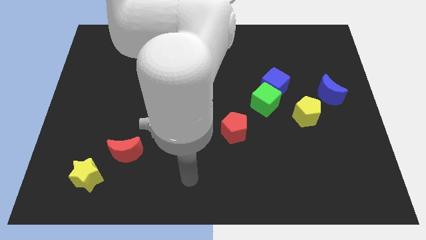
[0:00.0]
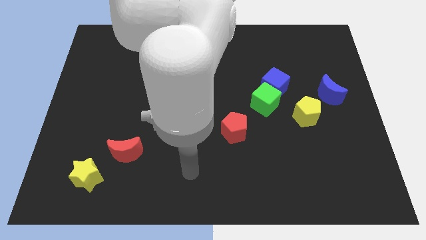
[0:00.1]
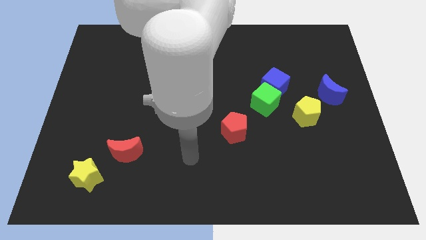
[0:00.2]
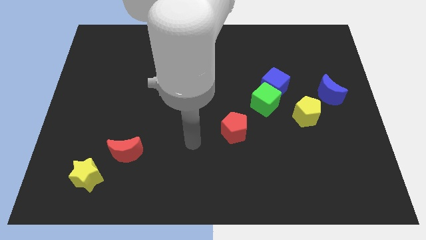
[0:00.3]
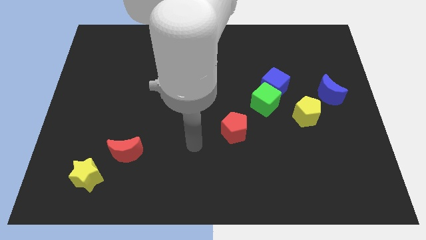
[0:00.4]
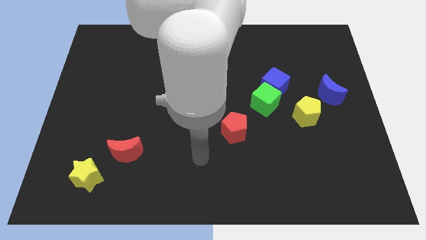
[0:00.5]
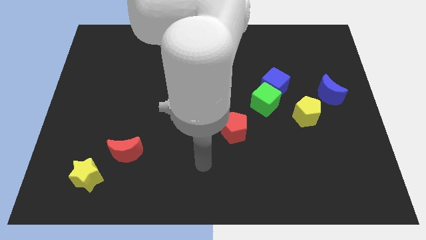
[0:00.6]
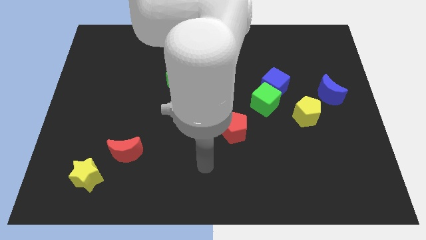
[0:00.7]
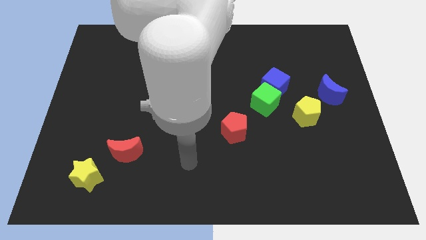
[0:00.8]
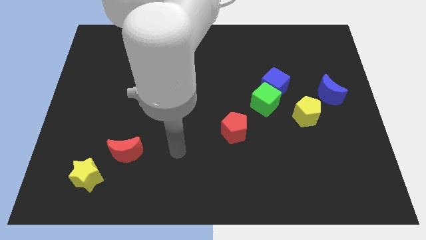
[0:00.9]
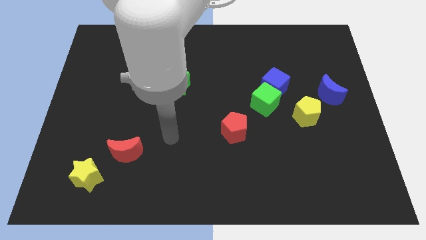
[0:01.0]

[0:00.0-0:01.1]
place arm in between red pentagon and red crescent

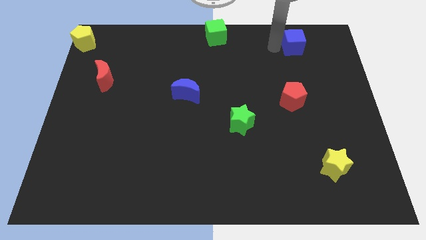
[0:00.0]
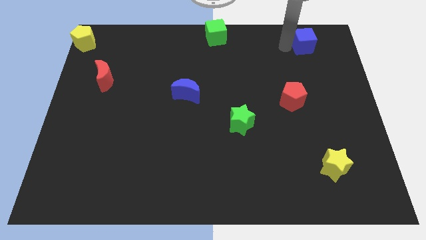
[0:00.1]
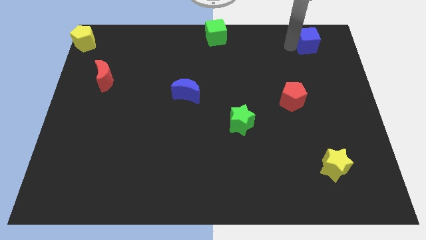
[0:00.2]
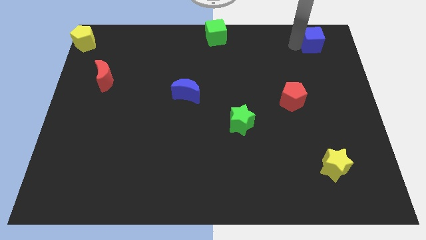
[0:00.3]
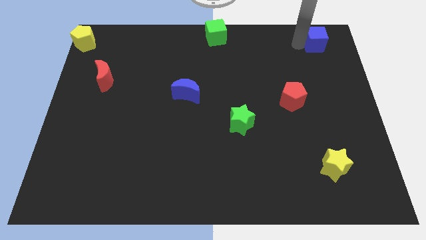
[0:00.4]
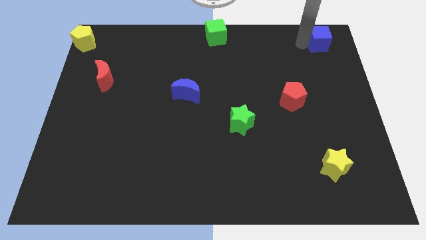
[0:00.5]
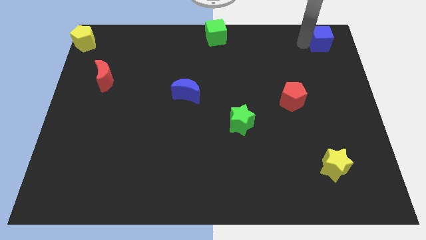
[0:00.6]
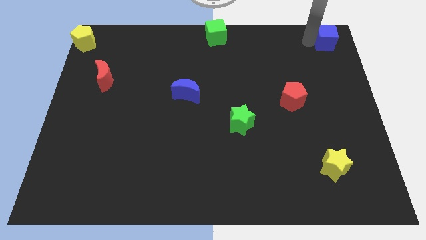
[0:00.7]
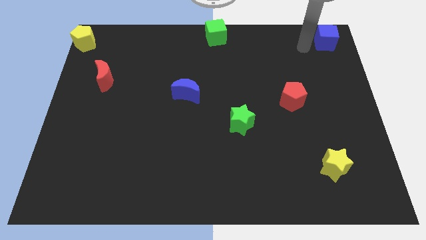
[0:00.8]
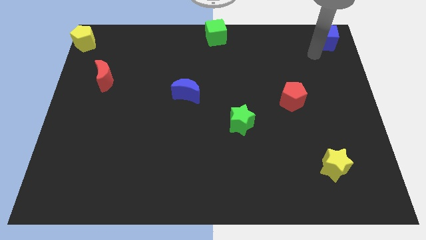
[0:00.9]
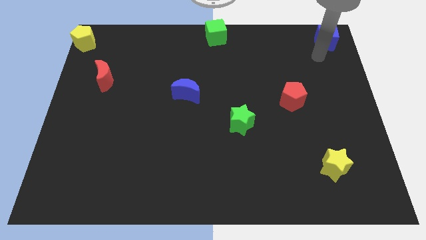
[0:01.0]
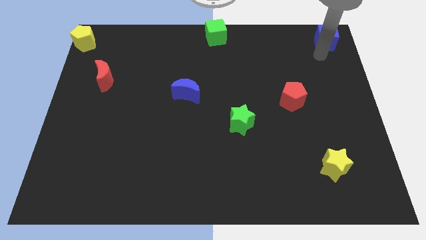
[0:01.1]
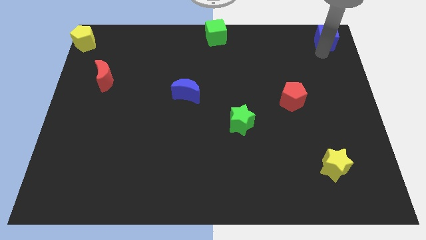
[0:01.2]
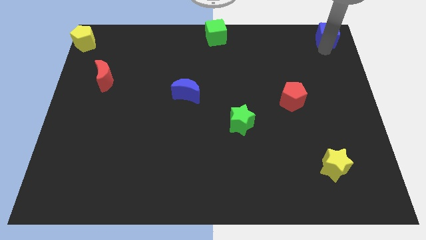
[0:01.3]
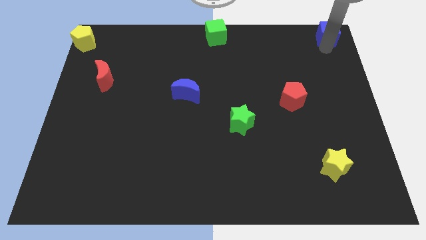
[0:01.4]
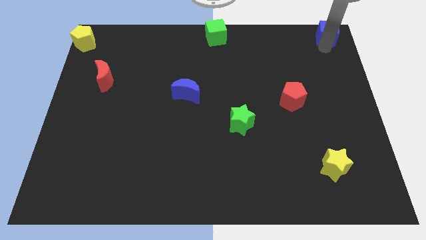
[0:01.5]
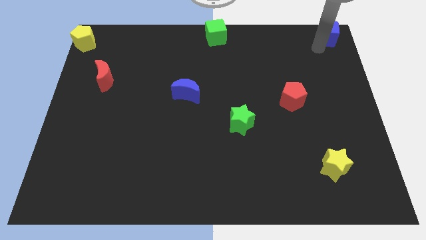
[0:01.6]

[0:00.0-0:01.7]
slide the blue cube diagonally top right to the red pentagon

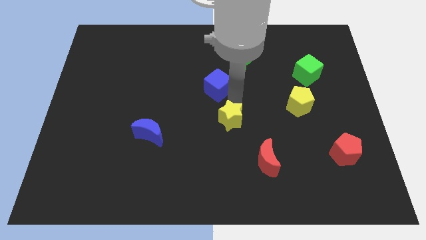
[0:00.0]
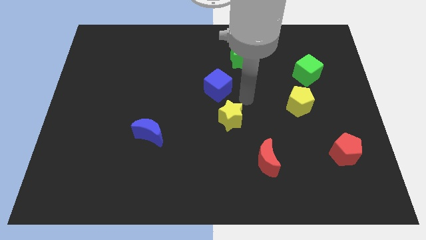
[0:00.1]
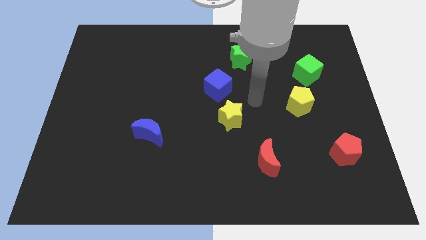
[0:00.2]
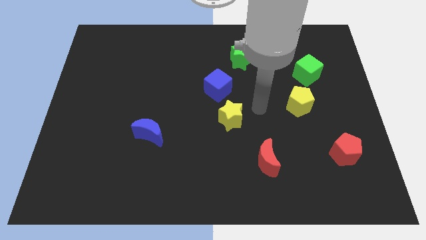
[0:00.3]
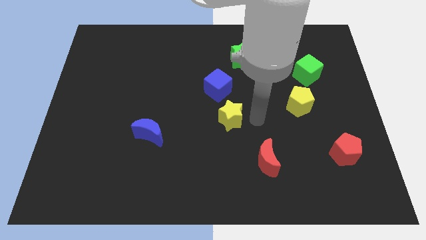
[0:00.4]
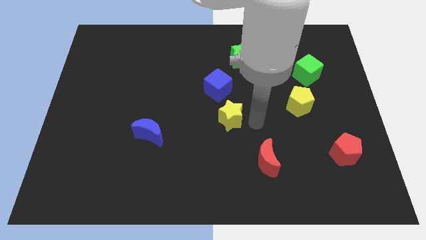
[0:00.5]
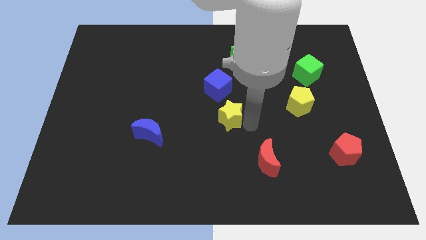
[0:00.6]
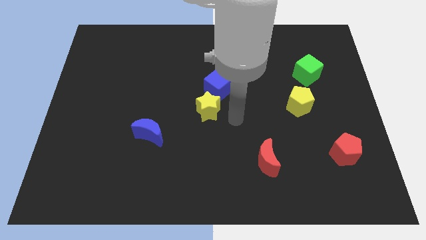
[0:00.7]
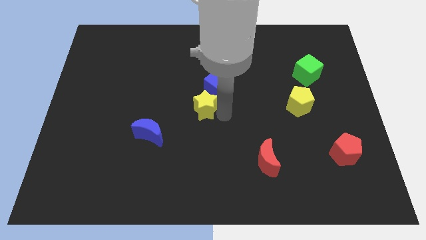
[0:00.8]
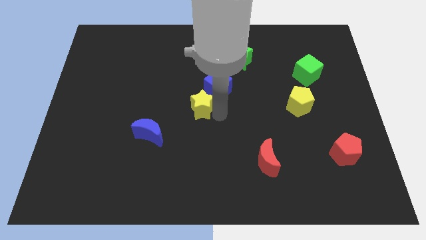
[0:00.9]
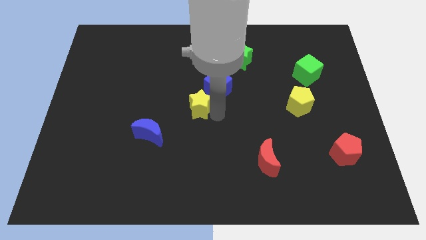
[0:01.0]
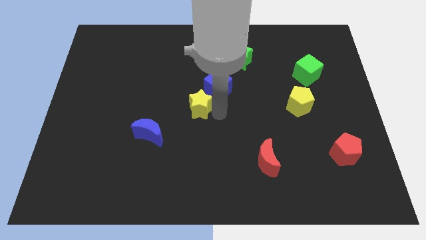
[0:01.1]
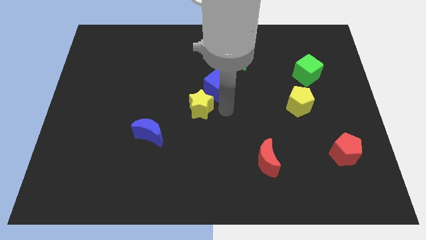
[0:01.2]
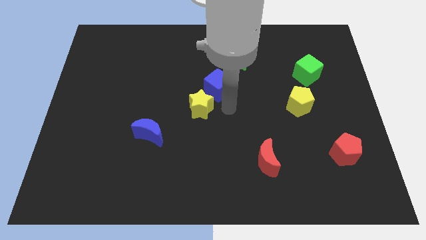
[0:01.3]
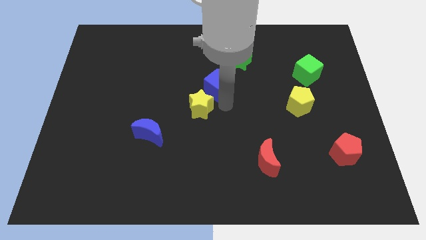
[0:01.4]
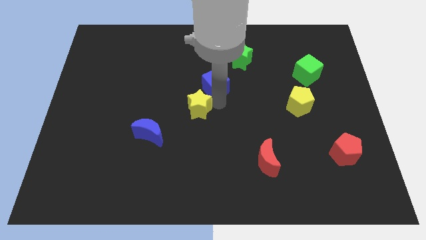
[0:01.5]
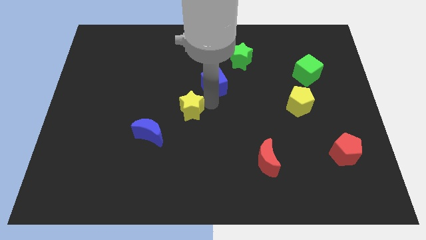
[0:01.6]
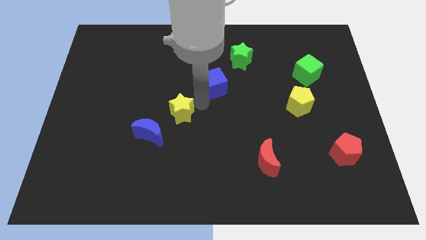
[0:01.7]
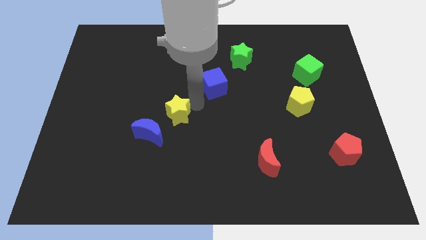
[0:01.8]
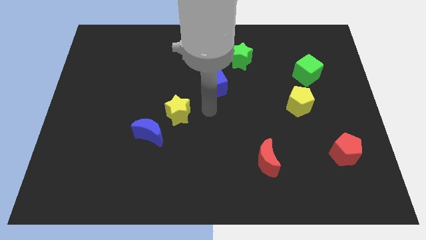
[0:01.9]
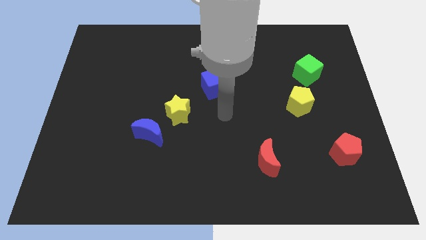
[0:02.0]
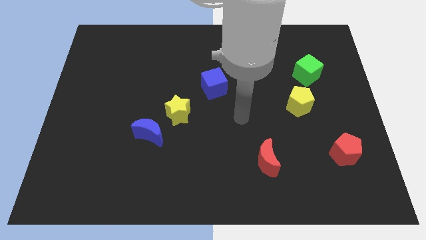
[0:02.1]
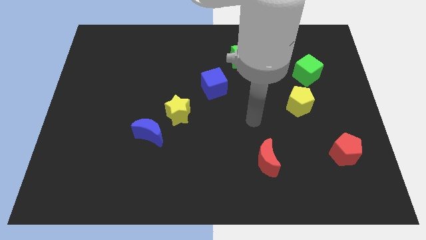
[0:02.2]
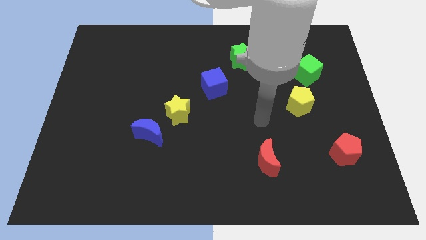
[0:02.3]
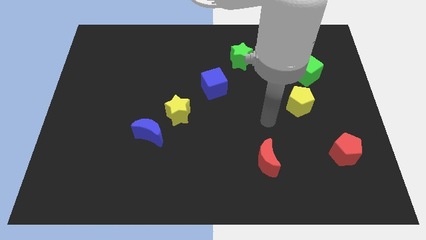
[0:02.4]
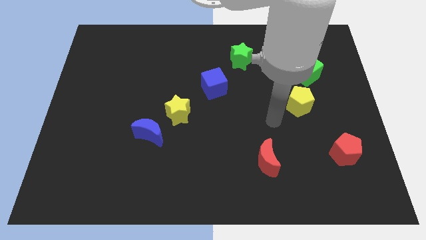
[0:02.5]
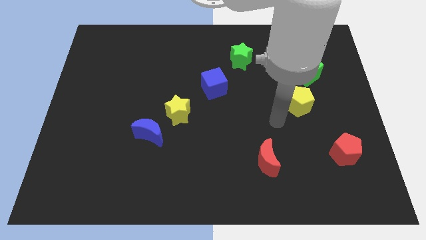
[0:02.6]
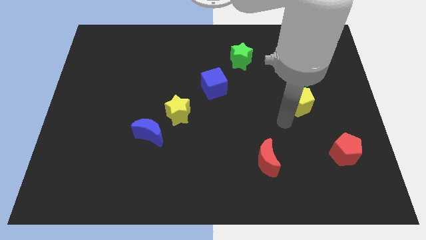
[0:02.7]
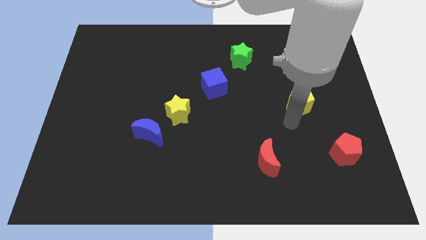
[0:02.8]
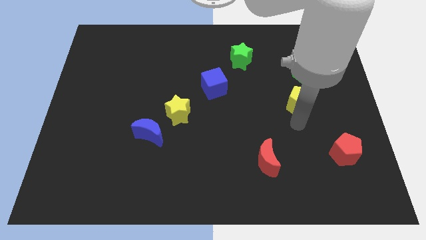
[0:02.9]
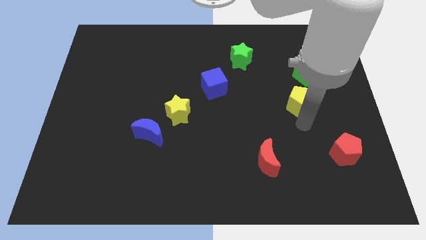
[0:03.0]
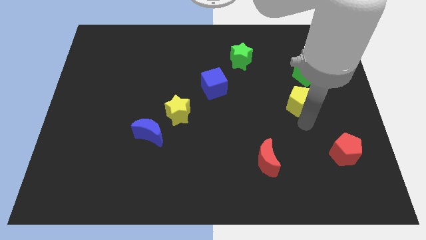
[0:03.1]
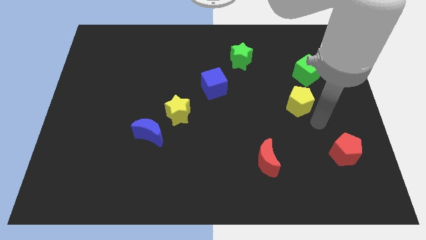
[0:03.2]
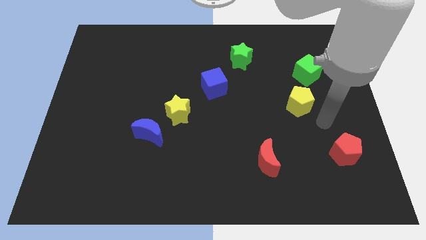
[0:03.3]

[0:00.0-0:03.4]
place the yellow star diagonally in between both the blue blocks

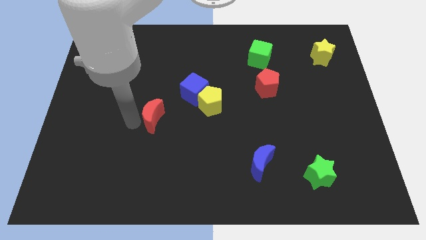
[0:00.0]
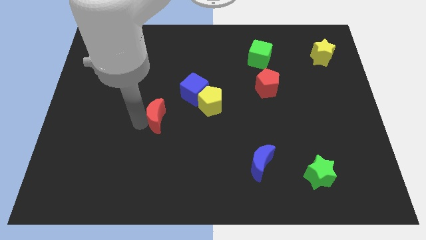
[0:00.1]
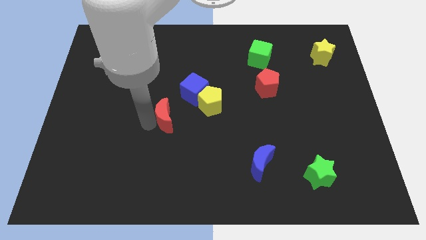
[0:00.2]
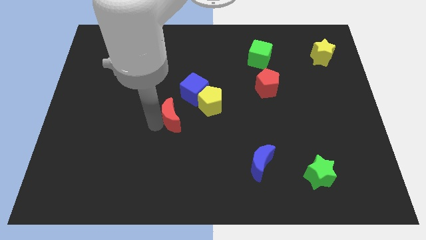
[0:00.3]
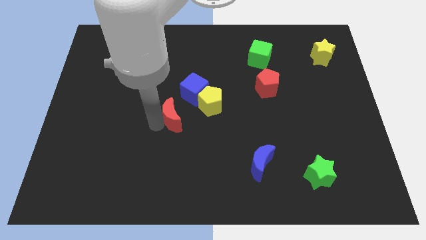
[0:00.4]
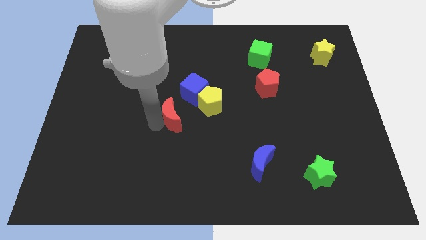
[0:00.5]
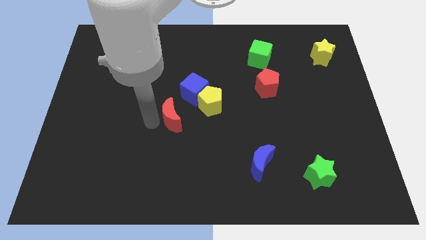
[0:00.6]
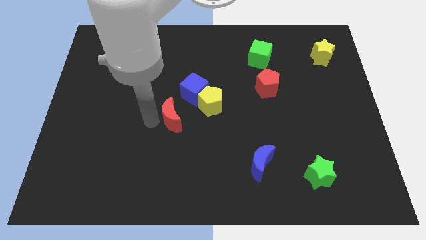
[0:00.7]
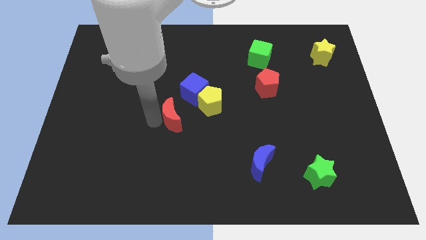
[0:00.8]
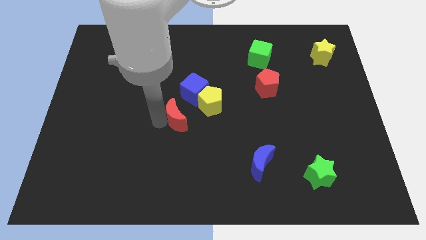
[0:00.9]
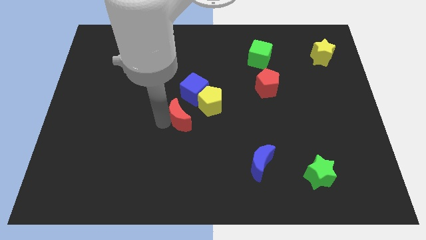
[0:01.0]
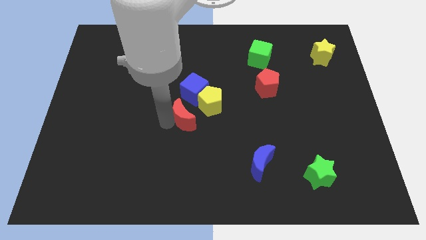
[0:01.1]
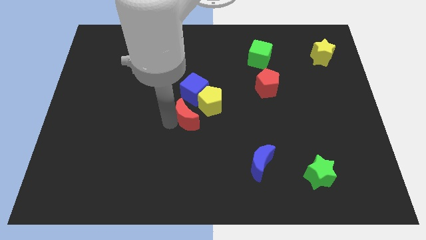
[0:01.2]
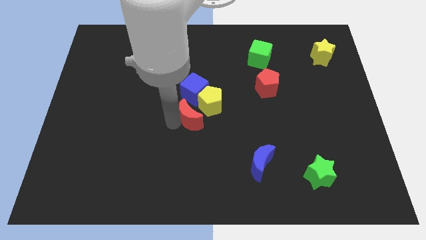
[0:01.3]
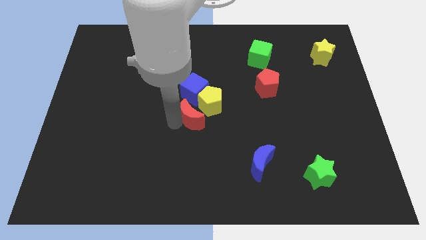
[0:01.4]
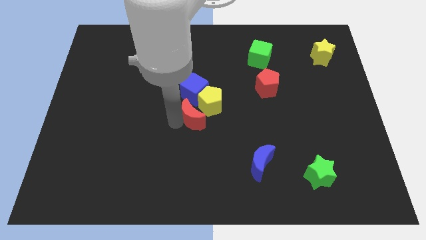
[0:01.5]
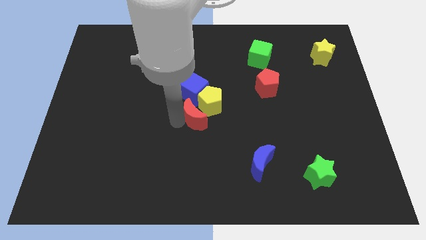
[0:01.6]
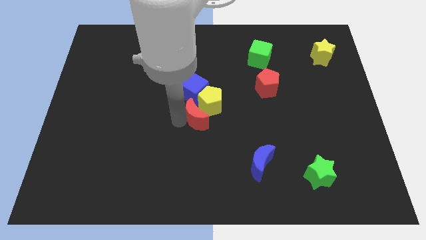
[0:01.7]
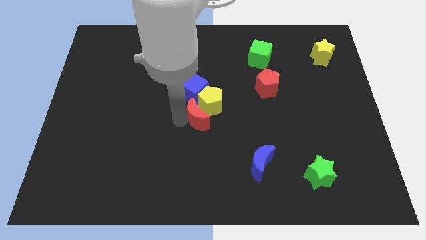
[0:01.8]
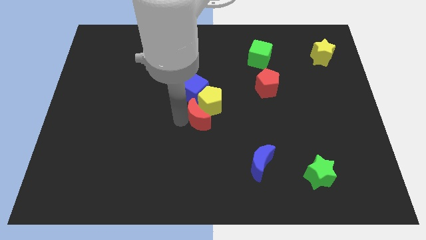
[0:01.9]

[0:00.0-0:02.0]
move the red crescent closer to the yellow pentagon

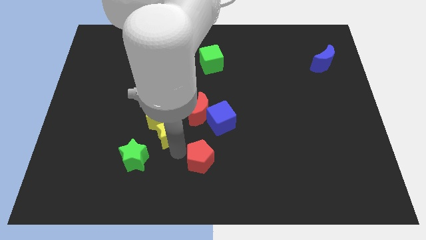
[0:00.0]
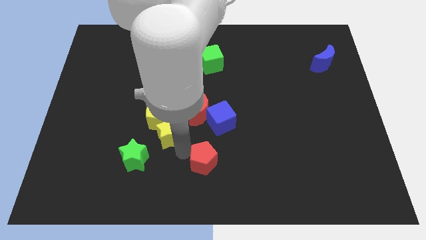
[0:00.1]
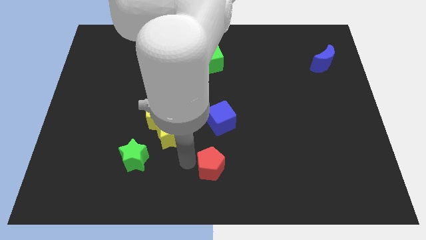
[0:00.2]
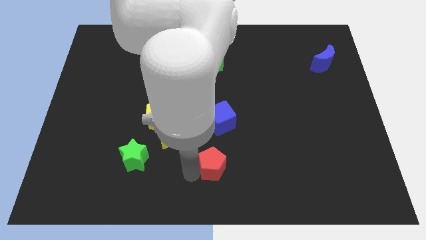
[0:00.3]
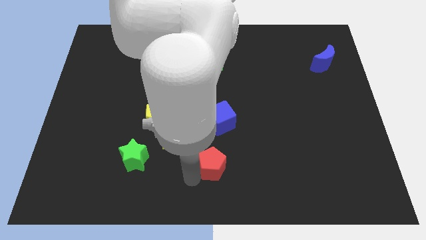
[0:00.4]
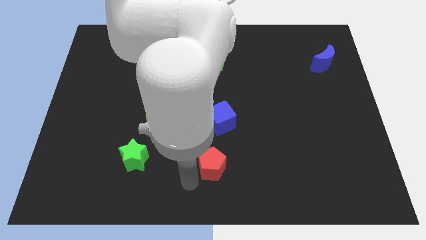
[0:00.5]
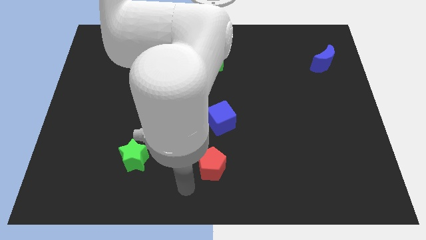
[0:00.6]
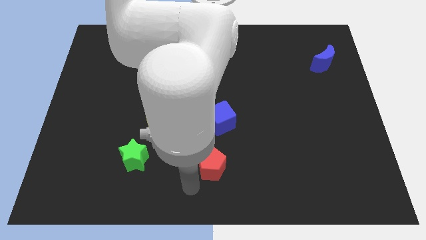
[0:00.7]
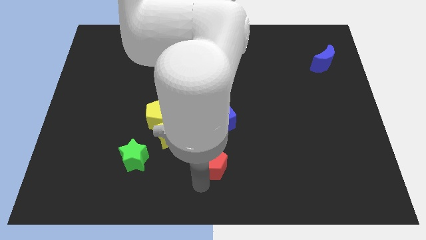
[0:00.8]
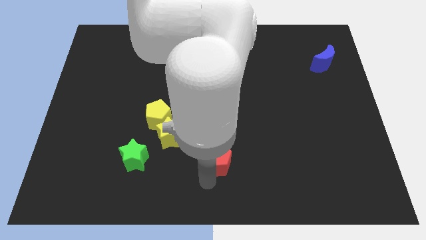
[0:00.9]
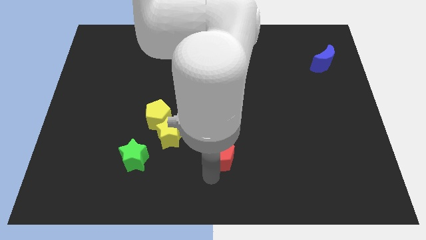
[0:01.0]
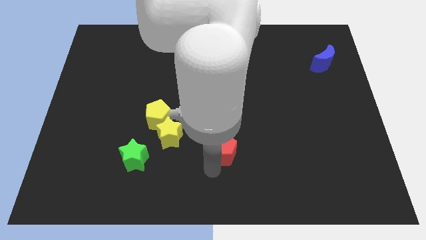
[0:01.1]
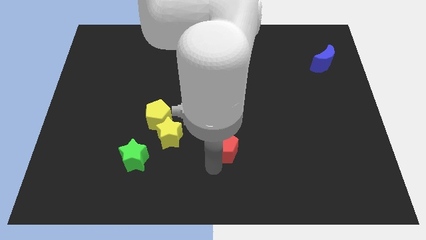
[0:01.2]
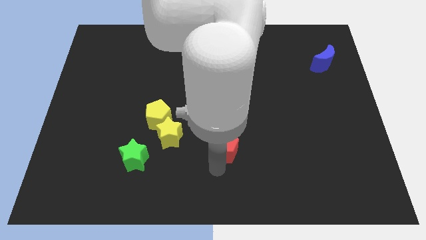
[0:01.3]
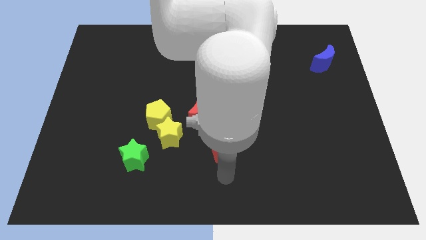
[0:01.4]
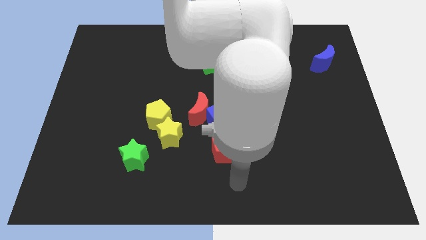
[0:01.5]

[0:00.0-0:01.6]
move rd pentagon towards the blue cube
